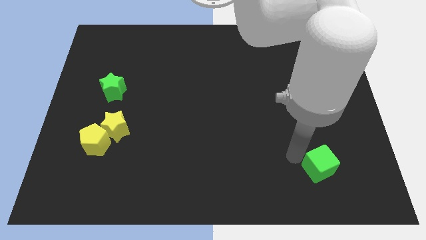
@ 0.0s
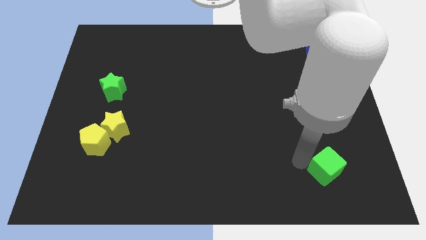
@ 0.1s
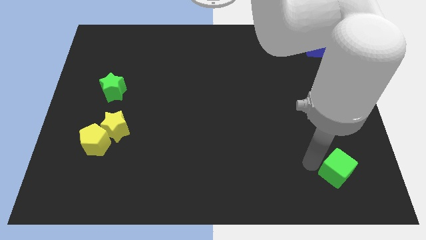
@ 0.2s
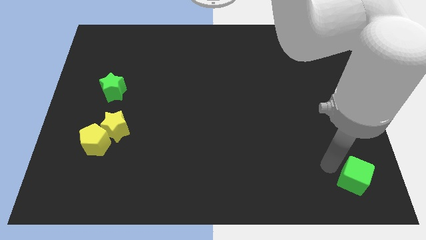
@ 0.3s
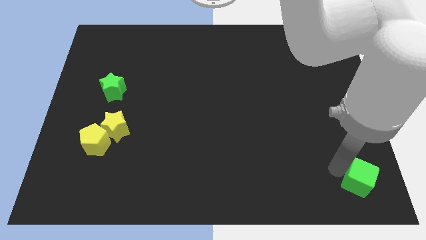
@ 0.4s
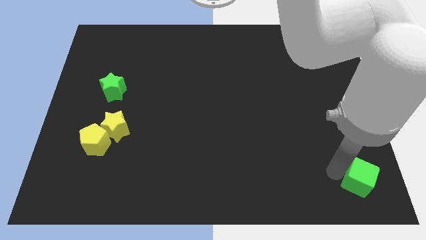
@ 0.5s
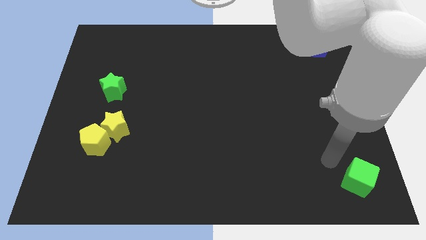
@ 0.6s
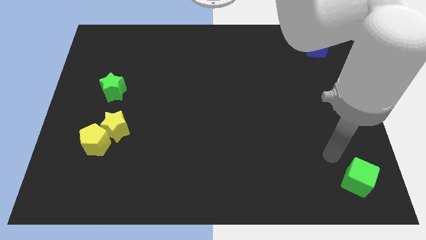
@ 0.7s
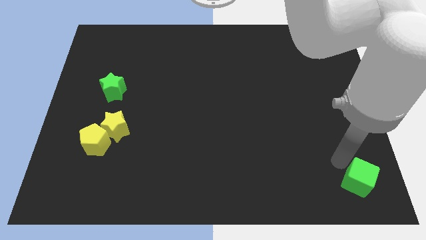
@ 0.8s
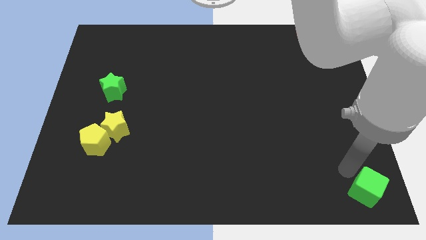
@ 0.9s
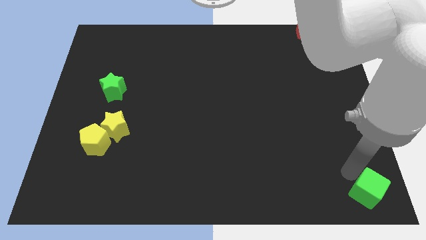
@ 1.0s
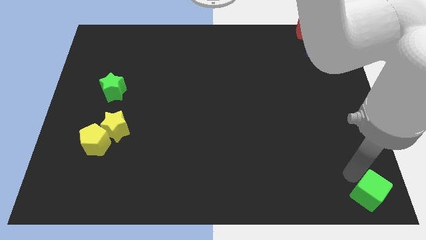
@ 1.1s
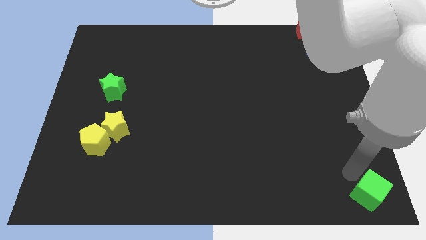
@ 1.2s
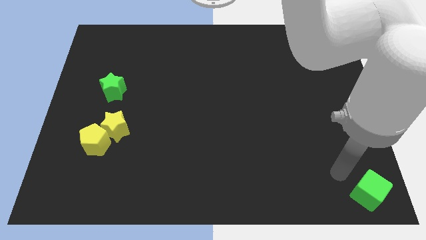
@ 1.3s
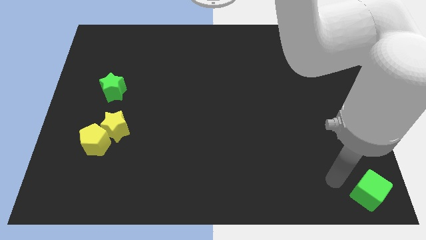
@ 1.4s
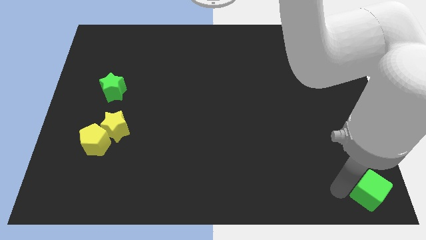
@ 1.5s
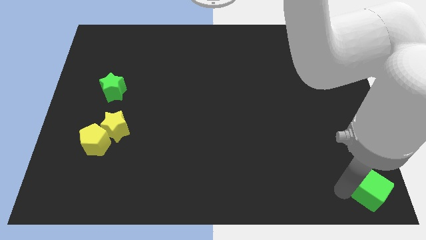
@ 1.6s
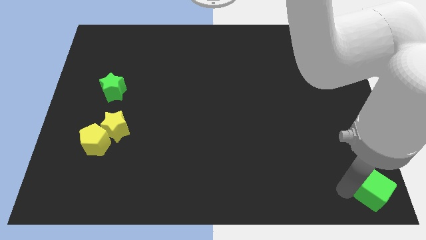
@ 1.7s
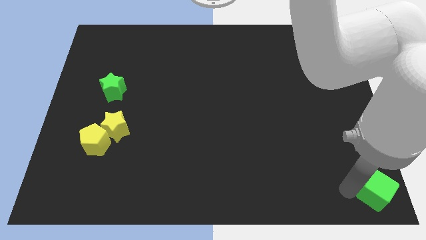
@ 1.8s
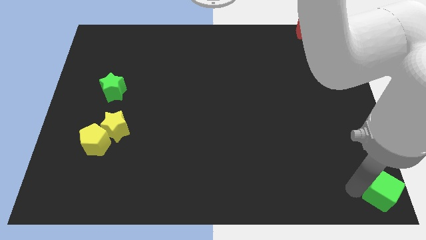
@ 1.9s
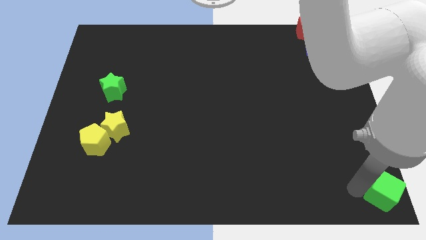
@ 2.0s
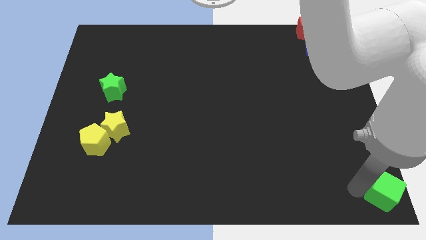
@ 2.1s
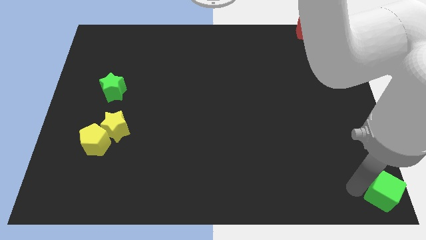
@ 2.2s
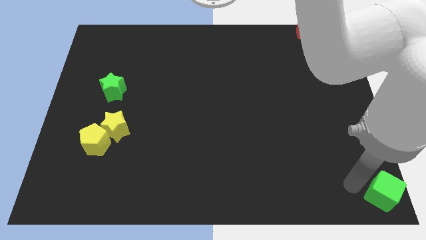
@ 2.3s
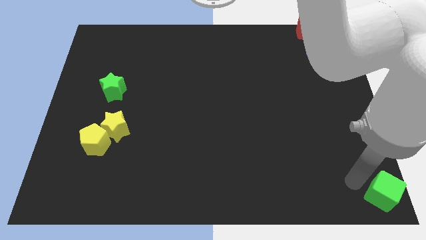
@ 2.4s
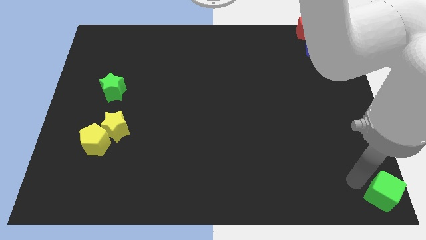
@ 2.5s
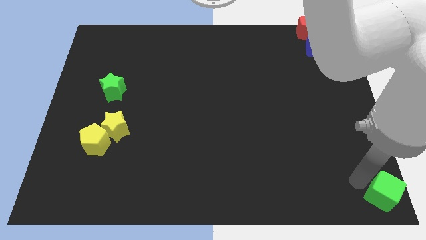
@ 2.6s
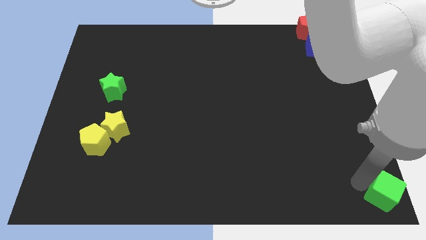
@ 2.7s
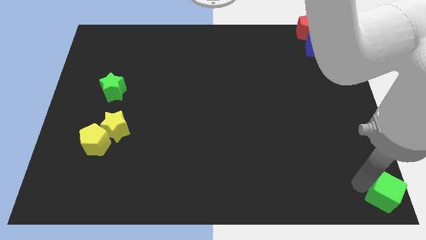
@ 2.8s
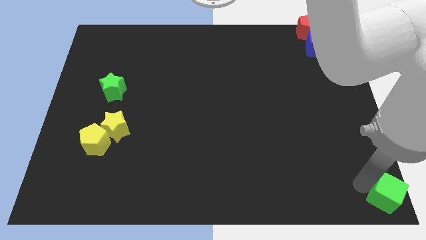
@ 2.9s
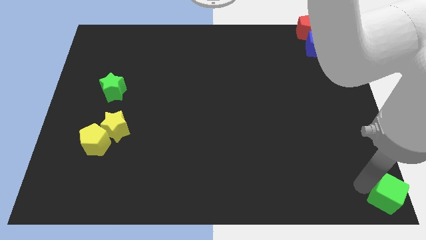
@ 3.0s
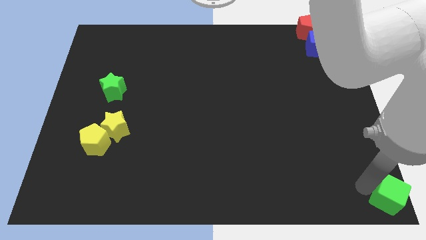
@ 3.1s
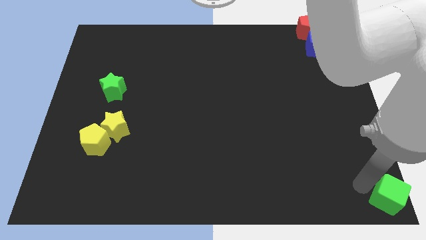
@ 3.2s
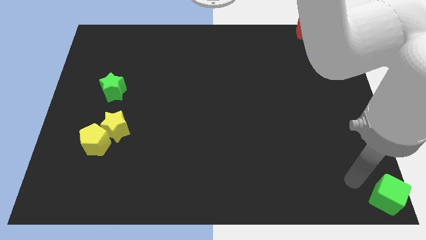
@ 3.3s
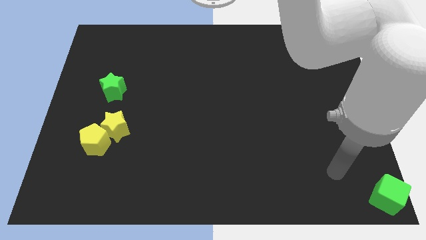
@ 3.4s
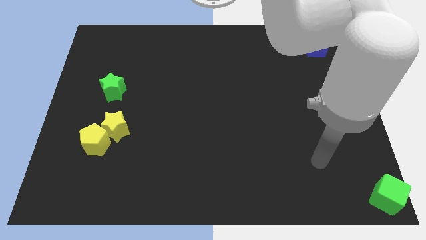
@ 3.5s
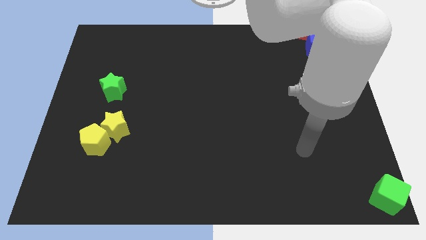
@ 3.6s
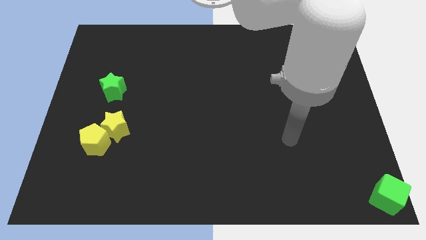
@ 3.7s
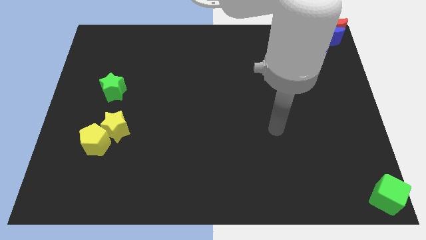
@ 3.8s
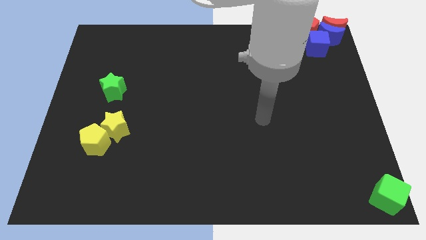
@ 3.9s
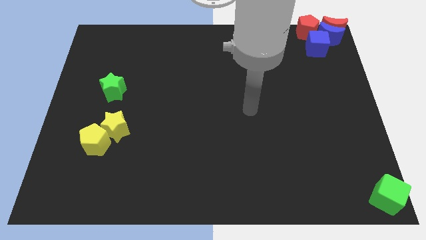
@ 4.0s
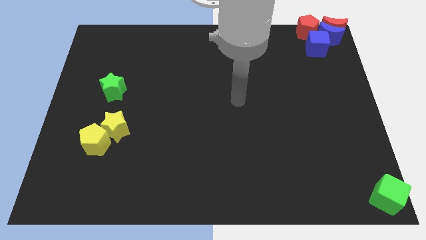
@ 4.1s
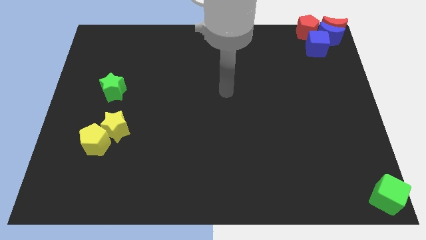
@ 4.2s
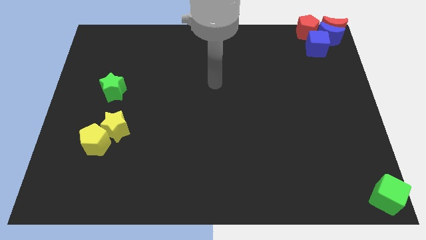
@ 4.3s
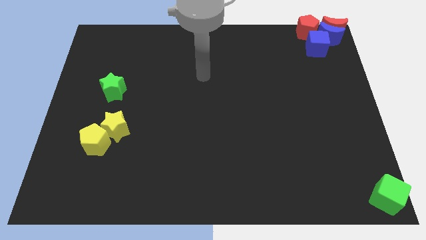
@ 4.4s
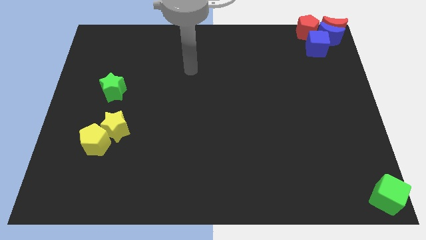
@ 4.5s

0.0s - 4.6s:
place the green cube at the bottom right corner

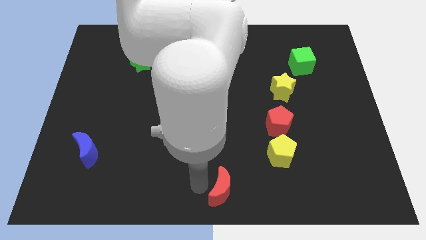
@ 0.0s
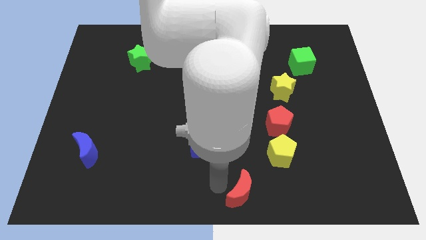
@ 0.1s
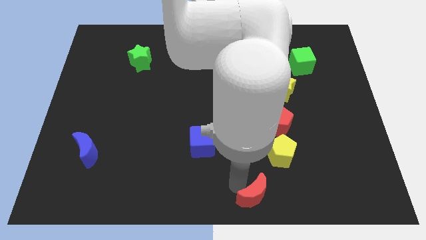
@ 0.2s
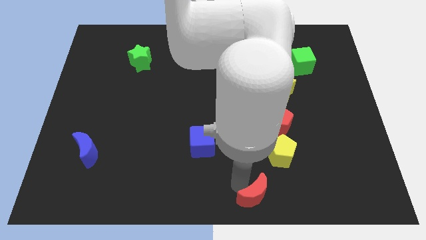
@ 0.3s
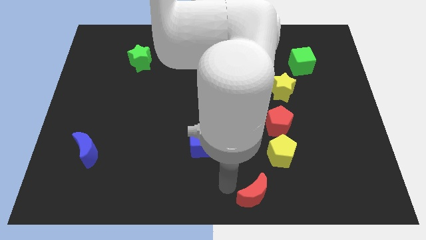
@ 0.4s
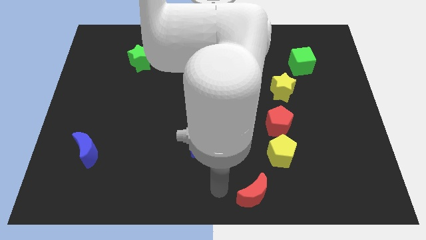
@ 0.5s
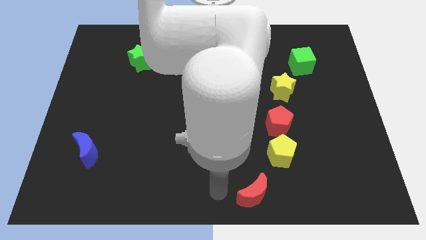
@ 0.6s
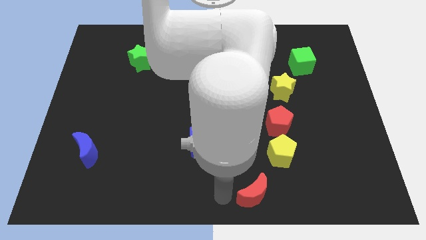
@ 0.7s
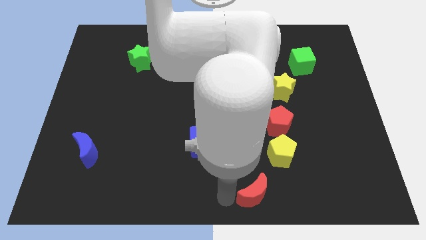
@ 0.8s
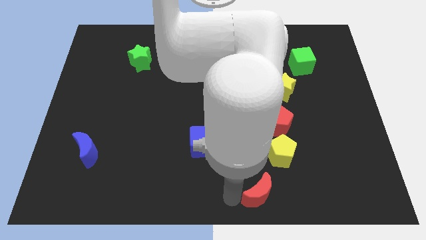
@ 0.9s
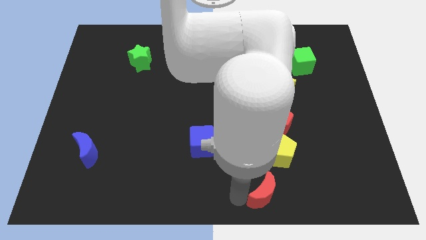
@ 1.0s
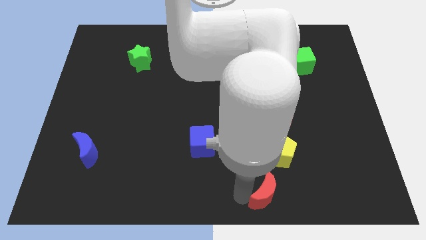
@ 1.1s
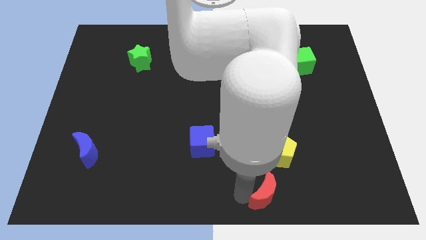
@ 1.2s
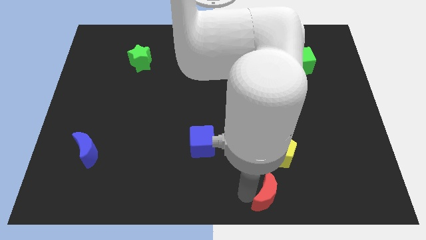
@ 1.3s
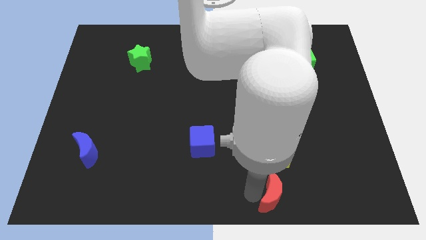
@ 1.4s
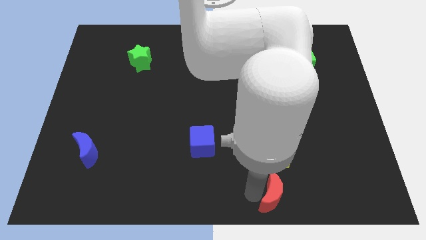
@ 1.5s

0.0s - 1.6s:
push red crescent below yellow pentagon

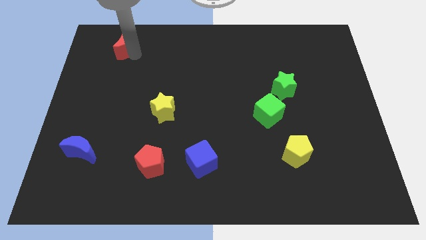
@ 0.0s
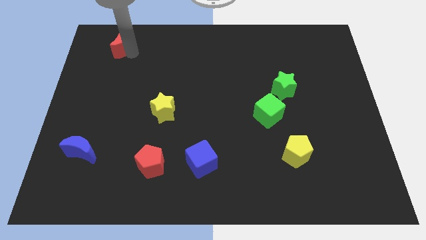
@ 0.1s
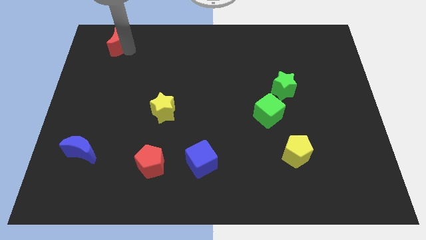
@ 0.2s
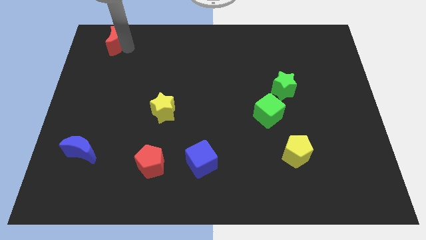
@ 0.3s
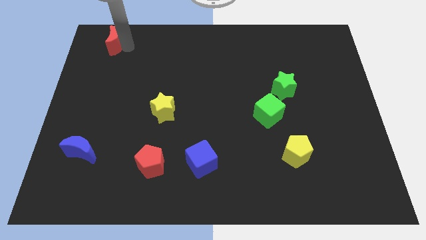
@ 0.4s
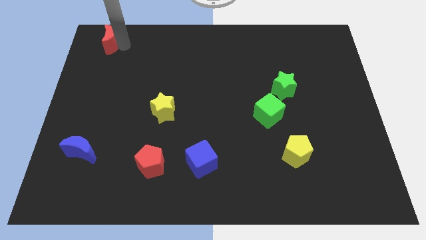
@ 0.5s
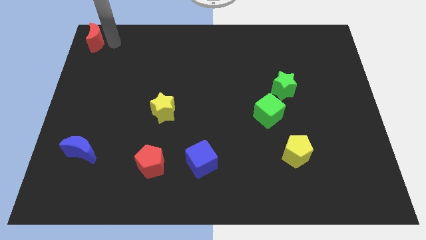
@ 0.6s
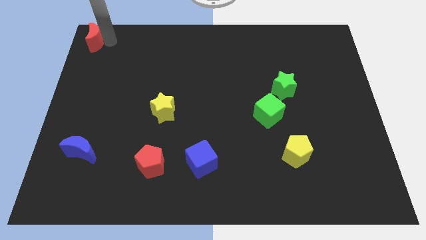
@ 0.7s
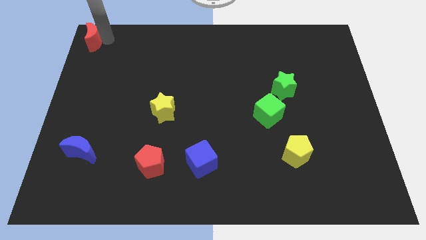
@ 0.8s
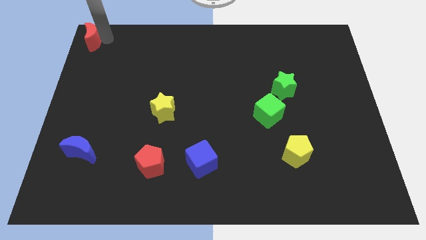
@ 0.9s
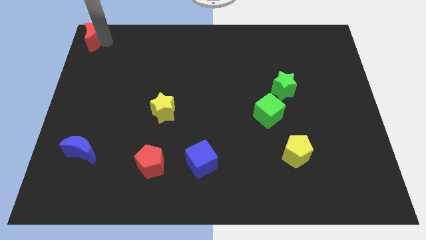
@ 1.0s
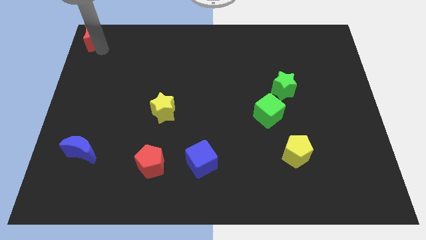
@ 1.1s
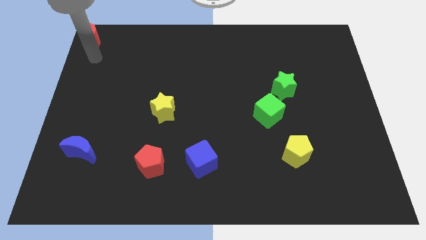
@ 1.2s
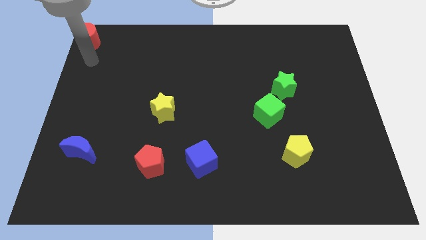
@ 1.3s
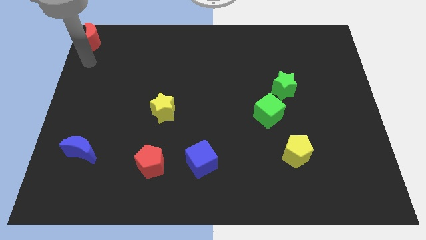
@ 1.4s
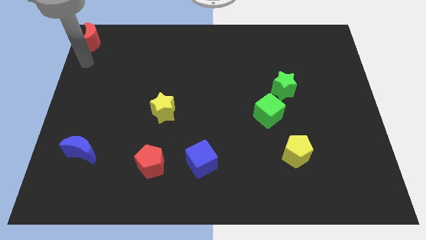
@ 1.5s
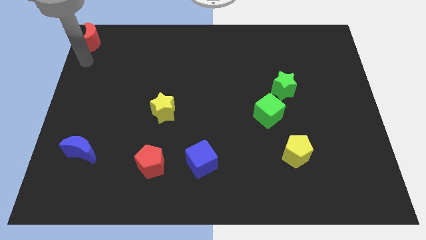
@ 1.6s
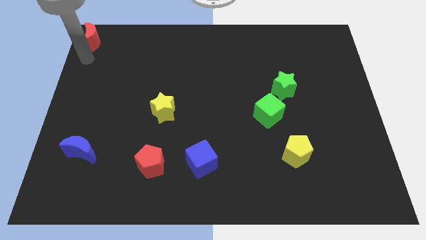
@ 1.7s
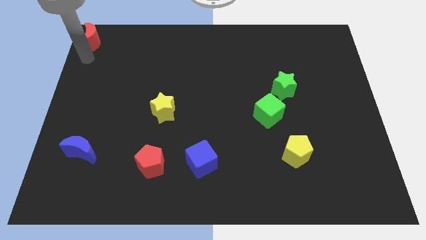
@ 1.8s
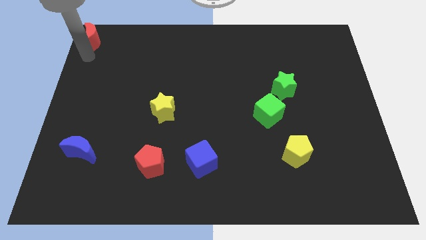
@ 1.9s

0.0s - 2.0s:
place red crescent at top left corner

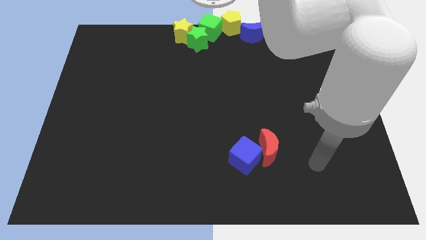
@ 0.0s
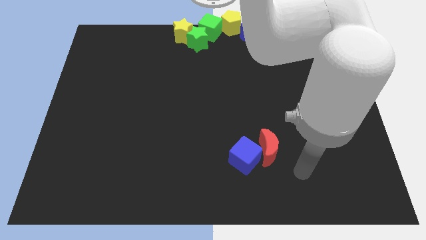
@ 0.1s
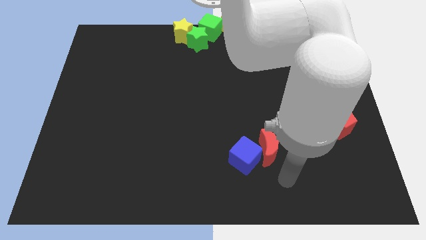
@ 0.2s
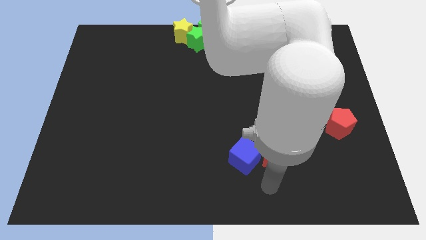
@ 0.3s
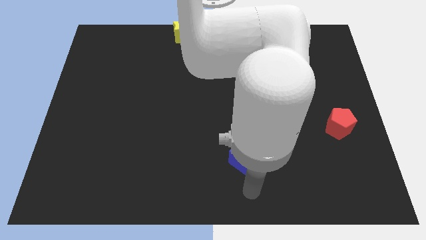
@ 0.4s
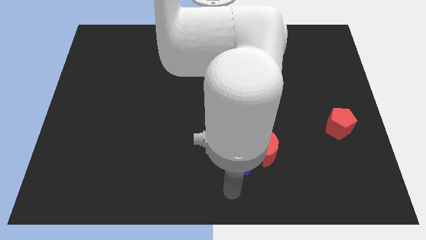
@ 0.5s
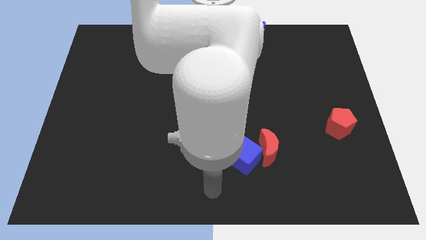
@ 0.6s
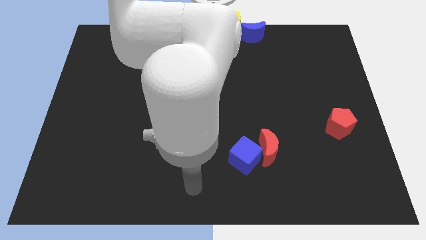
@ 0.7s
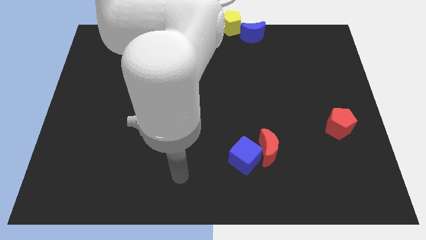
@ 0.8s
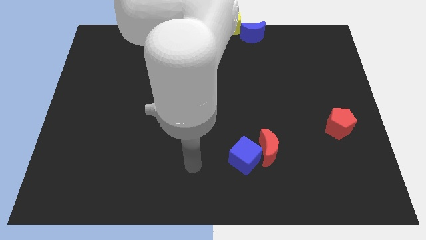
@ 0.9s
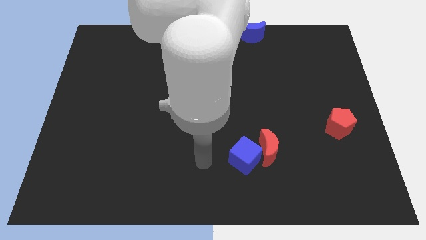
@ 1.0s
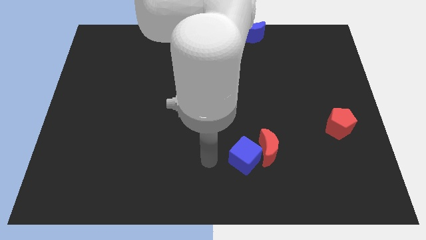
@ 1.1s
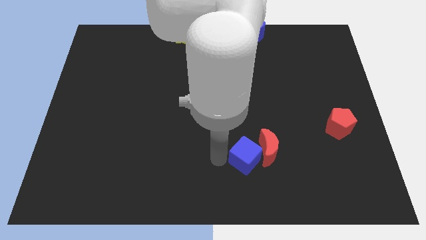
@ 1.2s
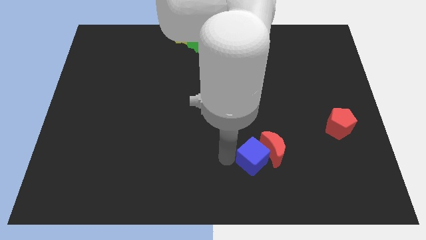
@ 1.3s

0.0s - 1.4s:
push the blue cube into the red crescent
